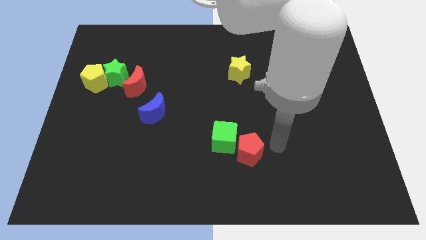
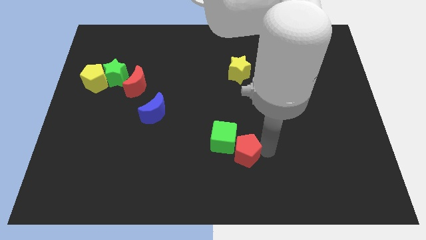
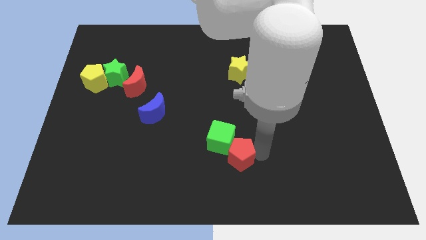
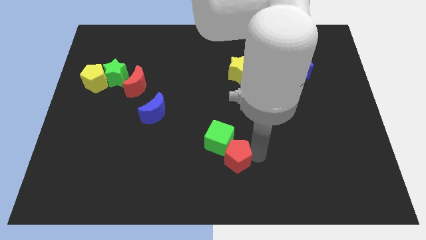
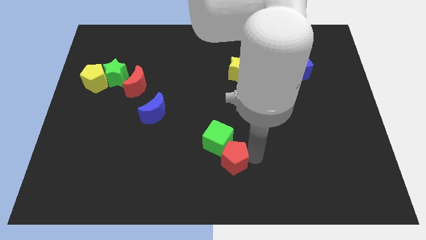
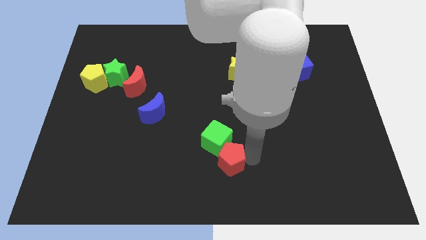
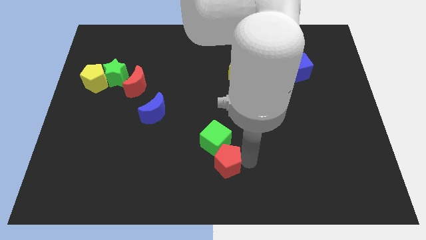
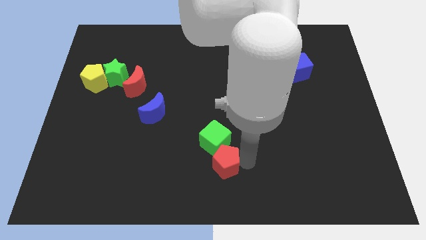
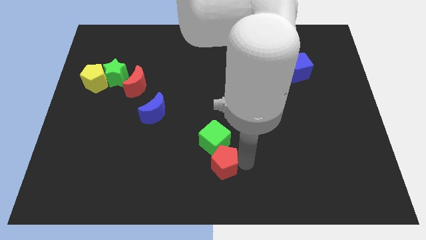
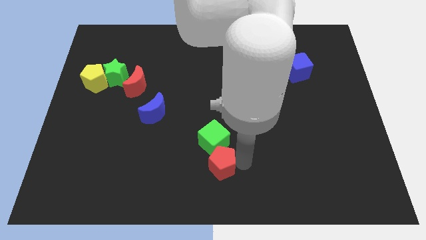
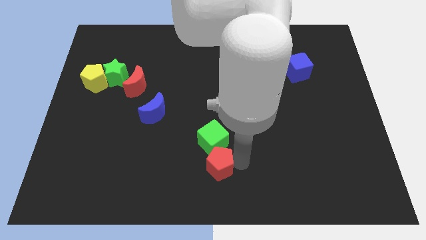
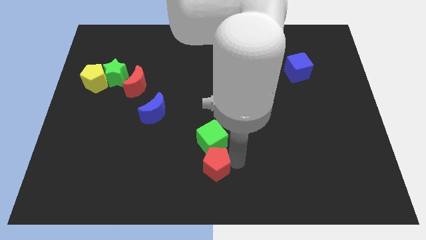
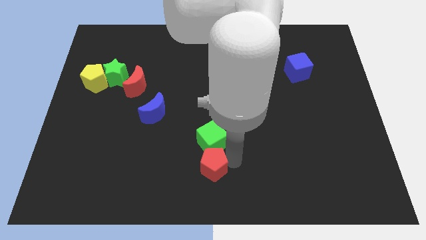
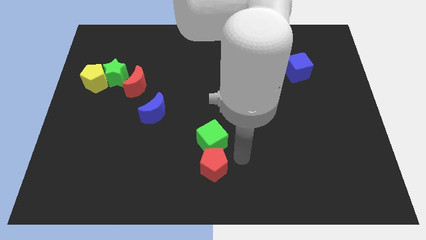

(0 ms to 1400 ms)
move the red pentagon to the bottom of the green cube

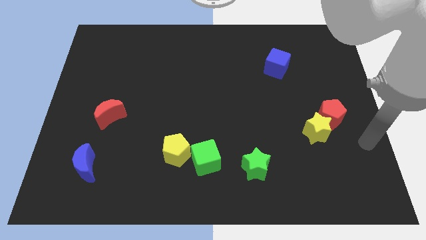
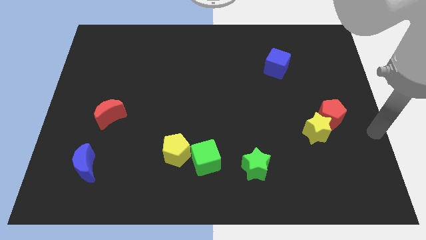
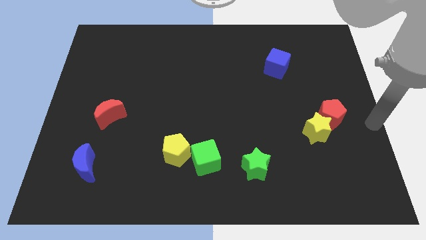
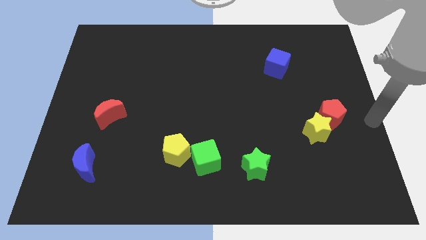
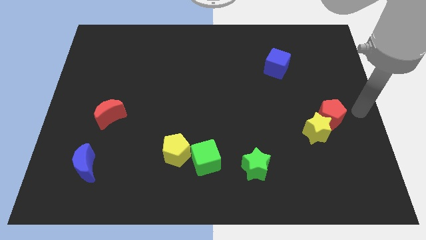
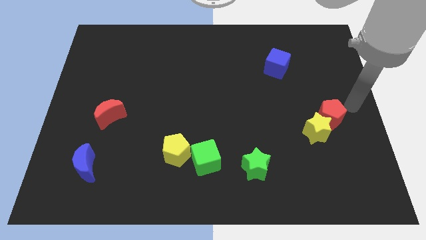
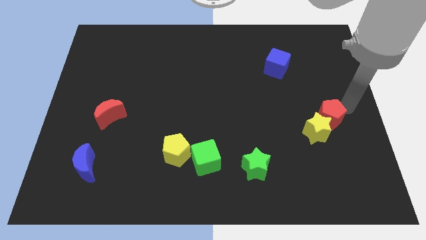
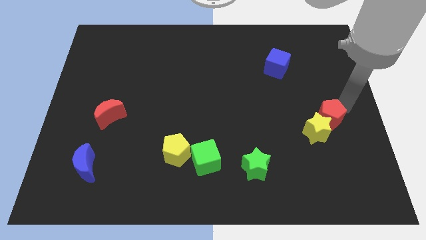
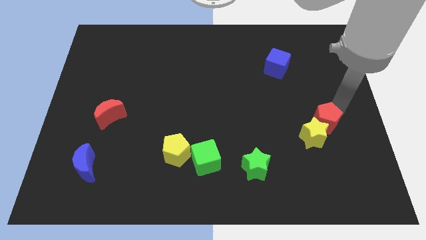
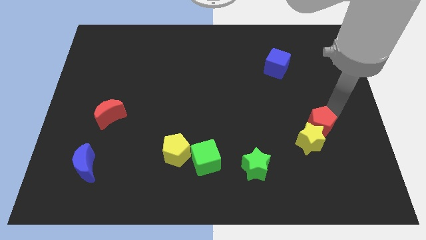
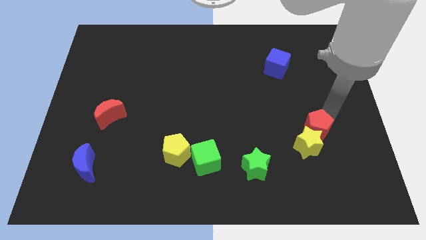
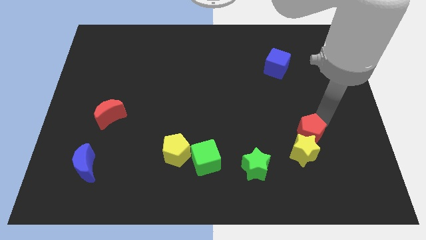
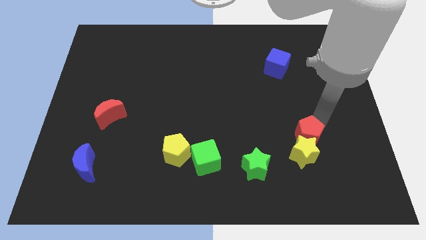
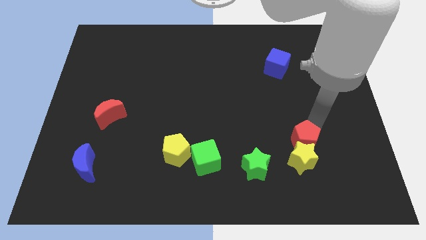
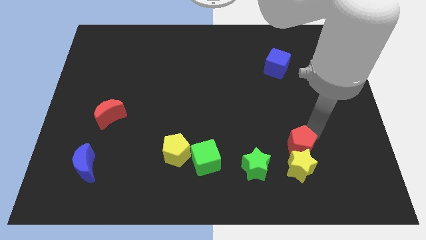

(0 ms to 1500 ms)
push the yellow star to the right of the green star

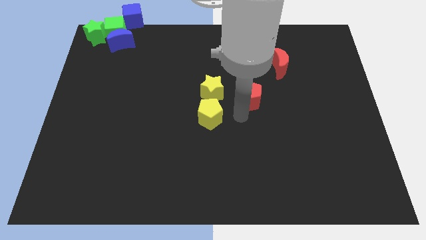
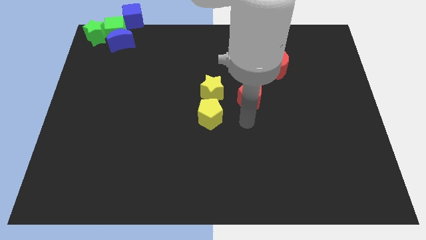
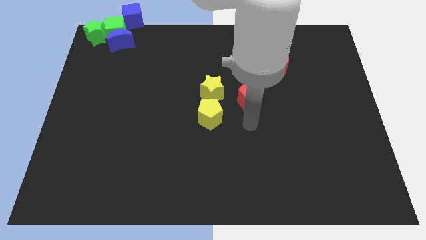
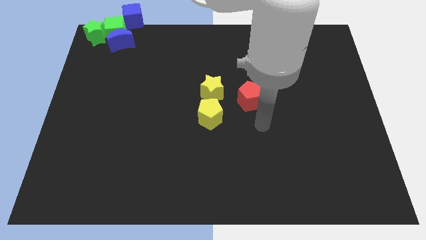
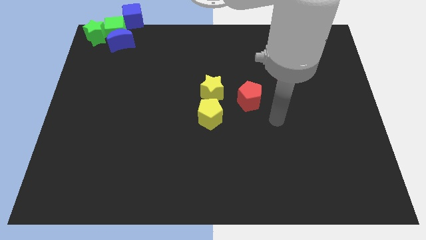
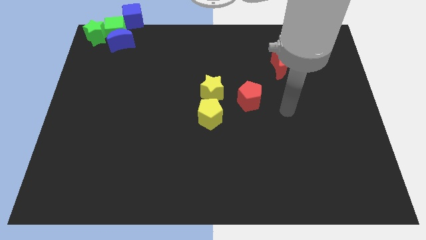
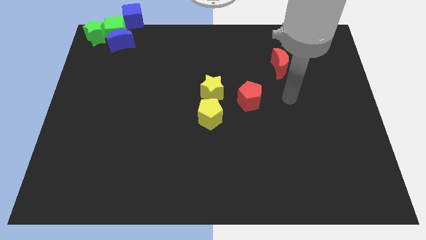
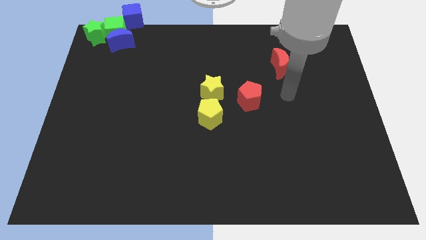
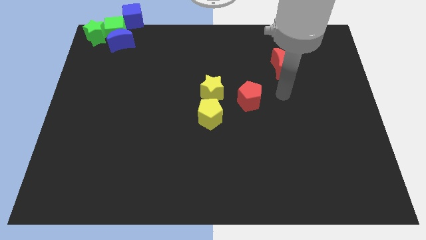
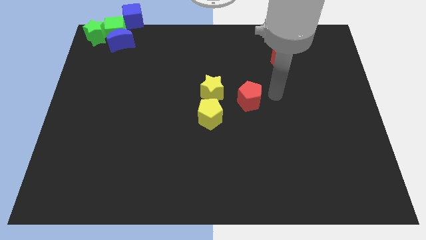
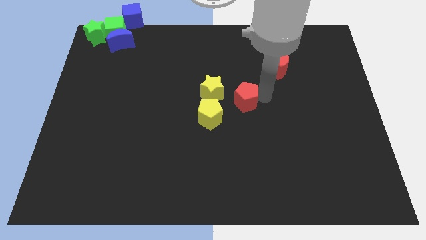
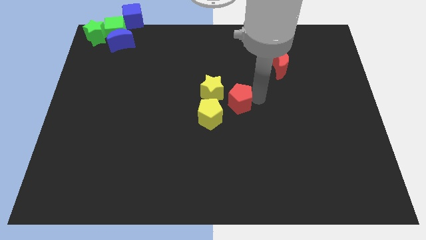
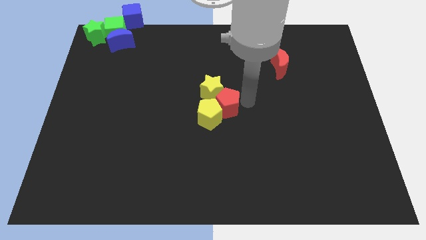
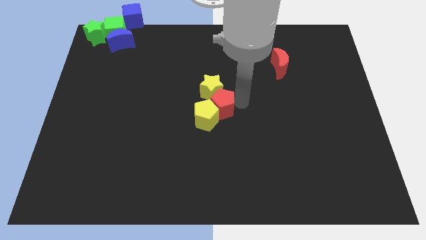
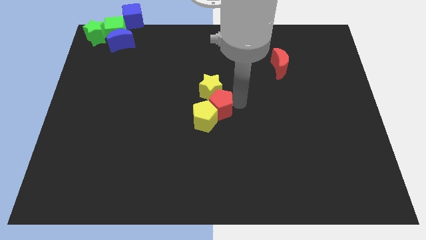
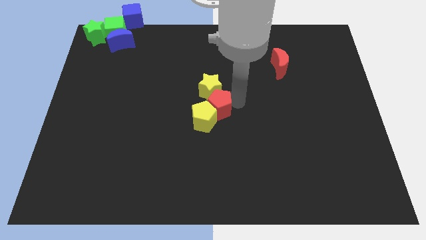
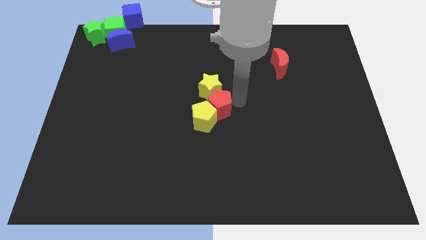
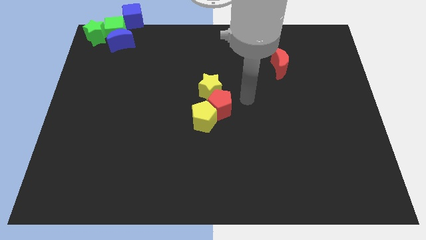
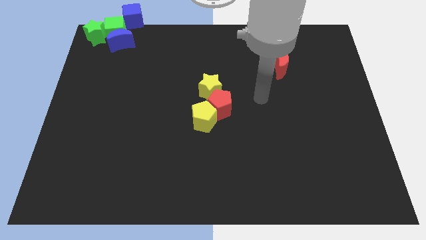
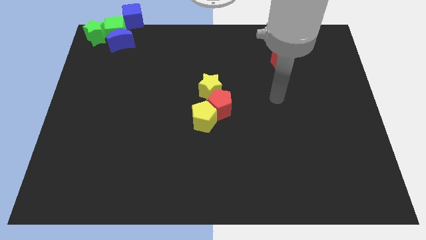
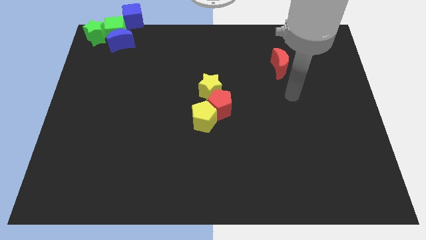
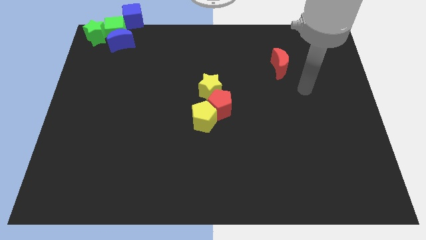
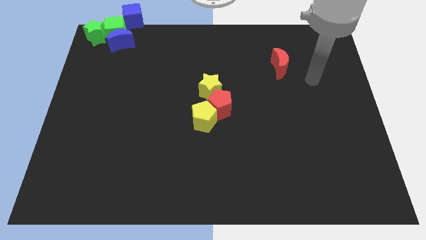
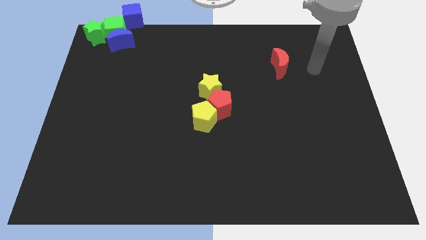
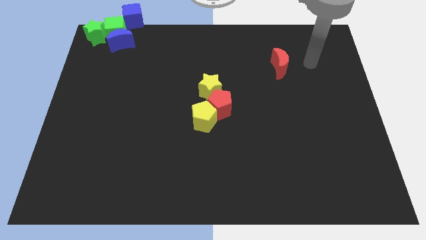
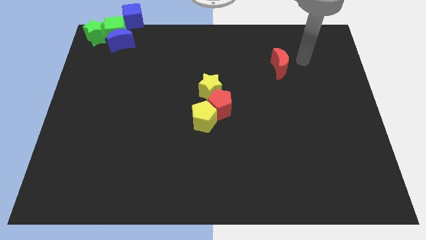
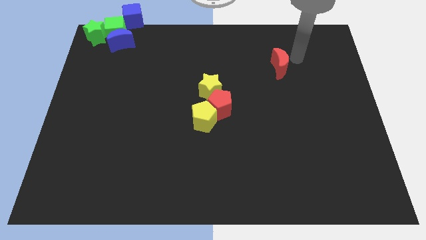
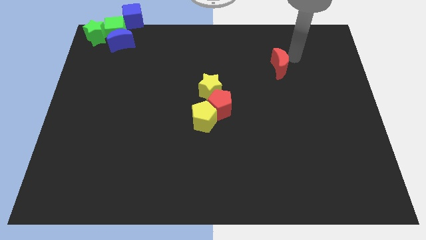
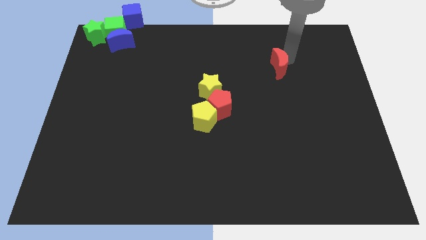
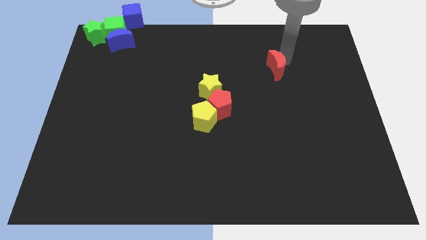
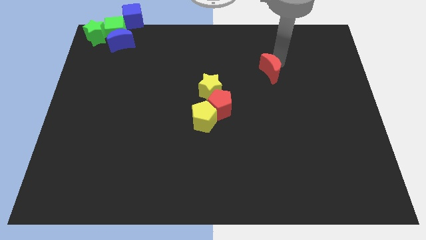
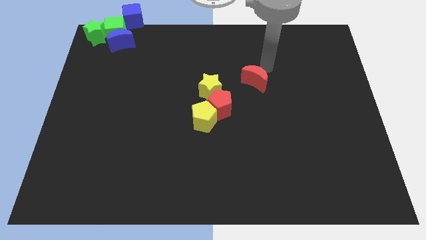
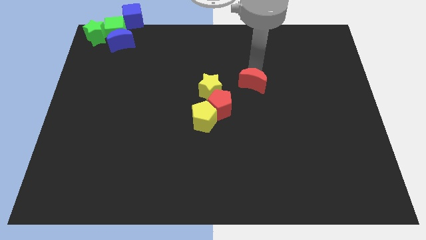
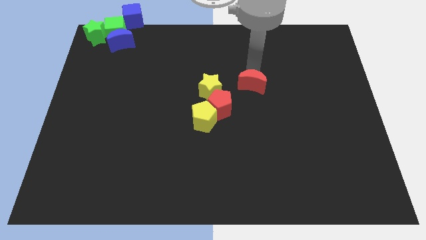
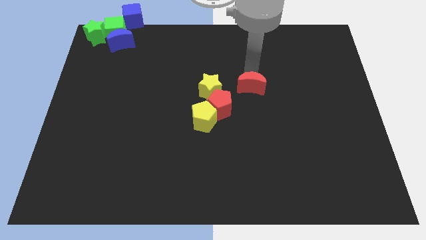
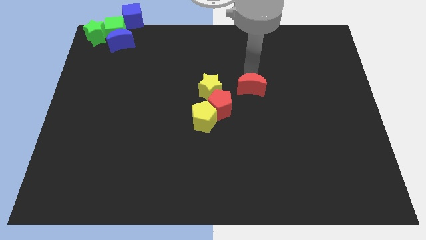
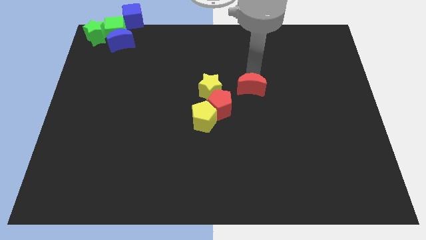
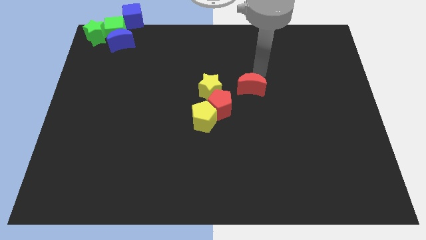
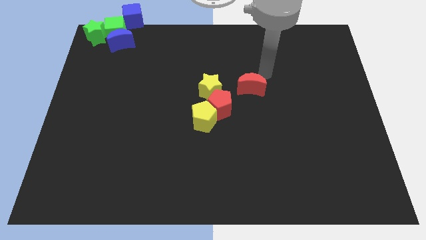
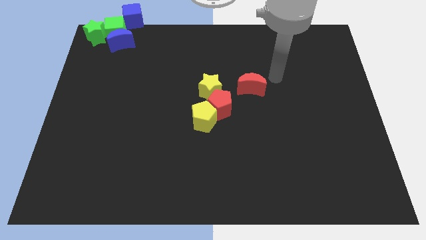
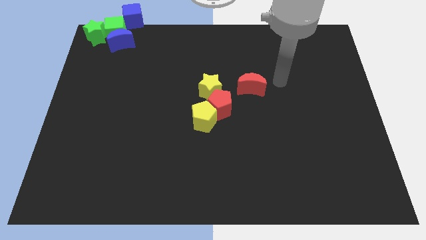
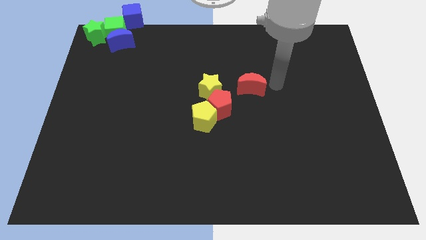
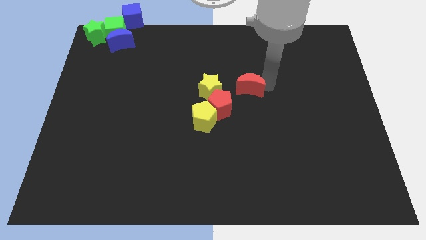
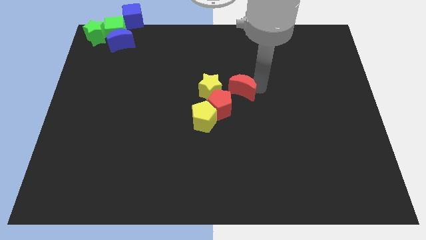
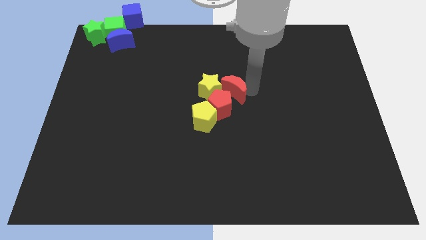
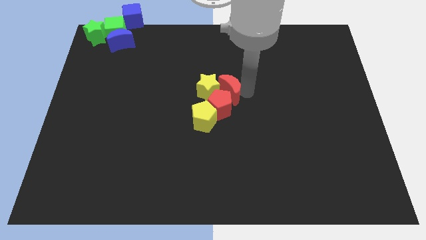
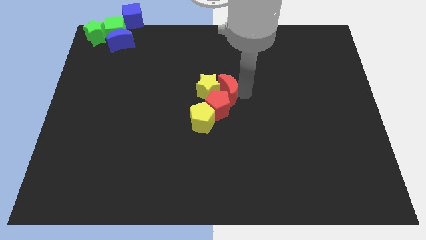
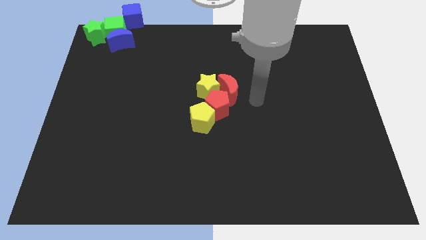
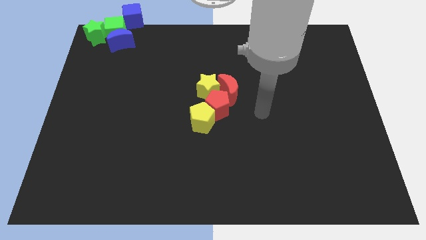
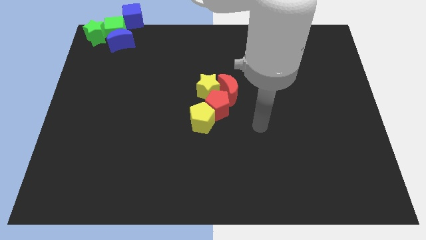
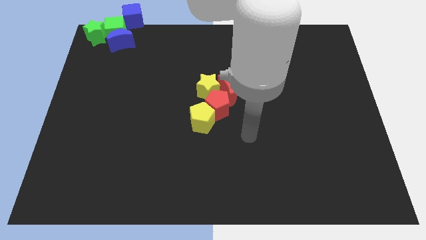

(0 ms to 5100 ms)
push the red blocks into the yellow blocks

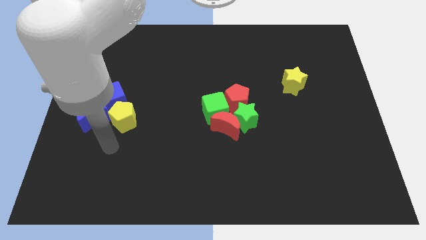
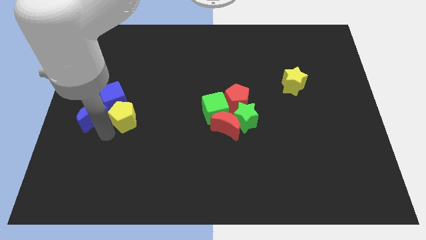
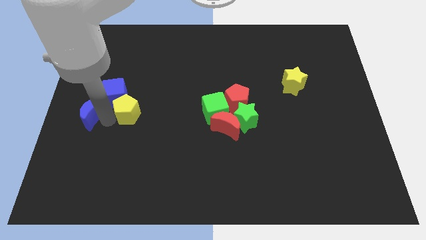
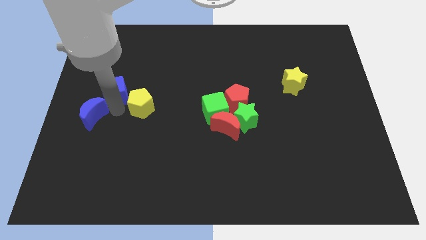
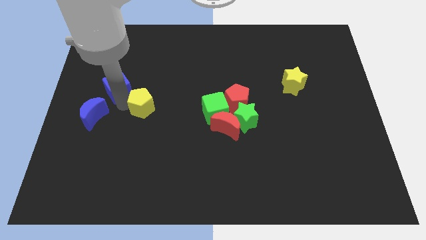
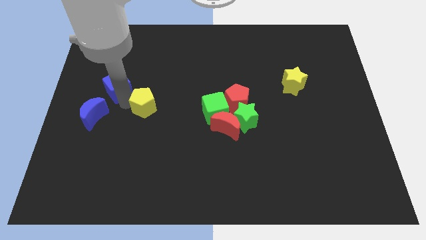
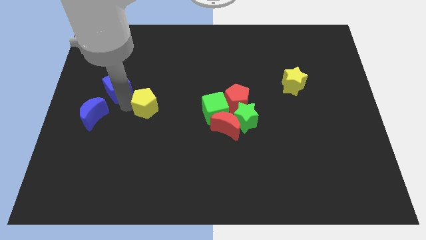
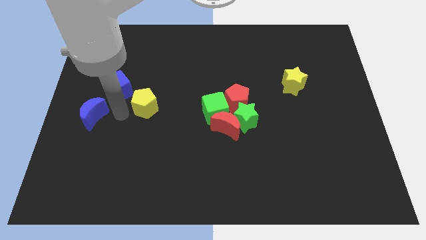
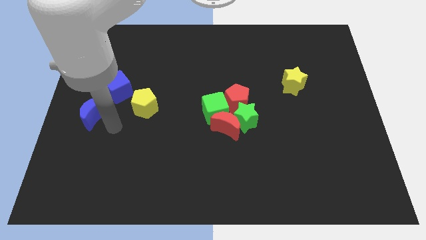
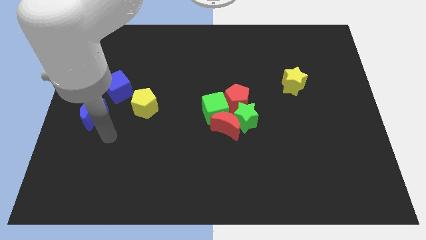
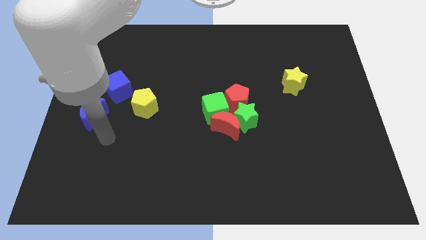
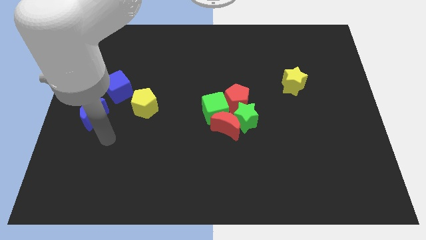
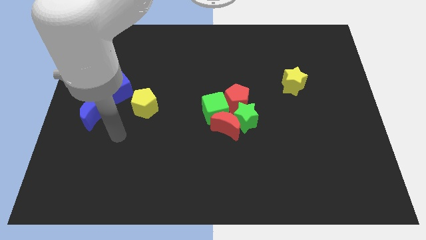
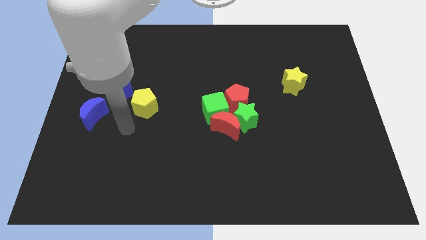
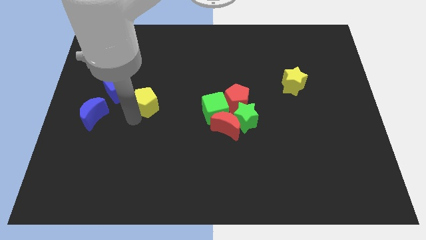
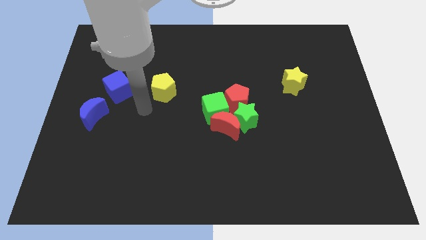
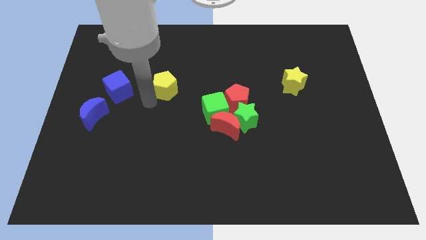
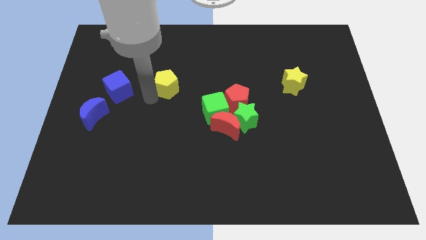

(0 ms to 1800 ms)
separate the blue cube and the yellow pentagon
